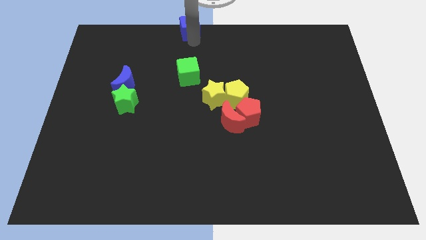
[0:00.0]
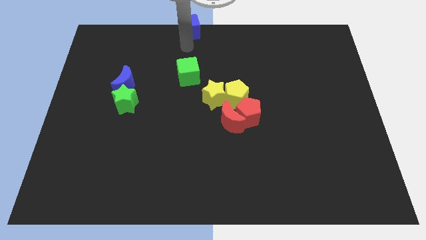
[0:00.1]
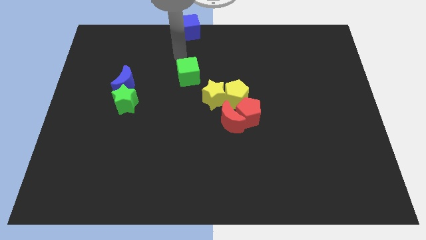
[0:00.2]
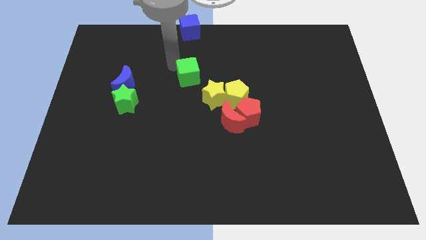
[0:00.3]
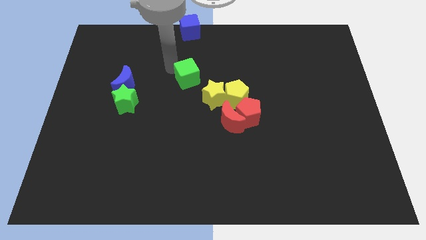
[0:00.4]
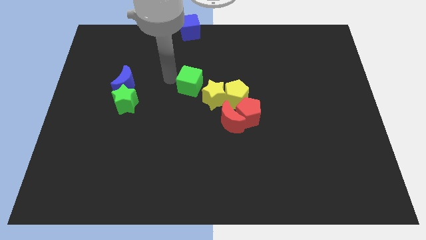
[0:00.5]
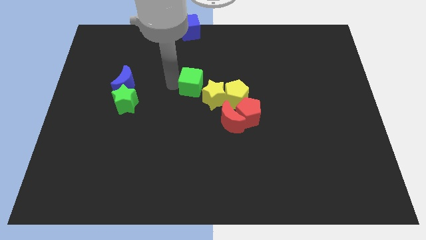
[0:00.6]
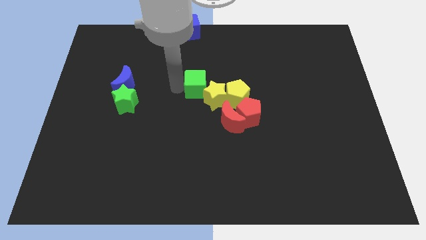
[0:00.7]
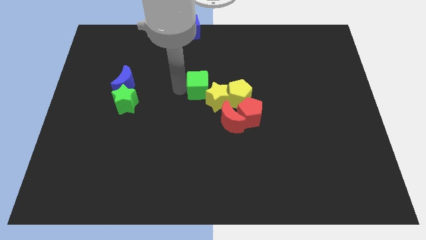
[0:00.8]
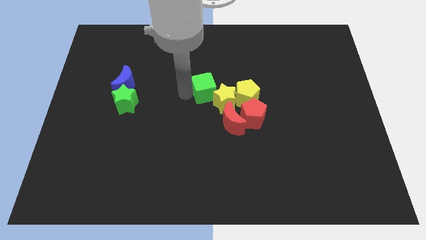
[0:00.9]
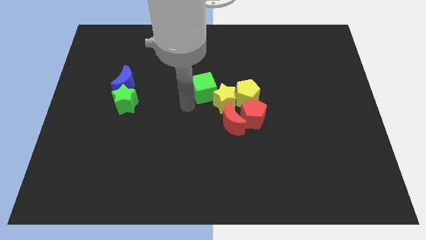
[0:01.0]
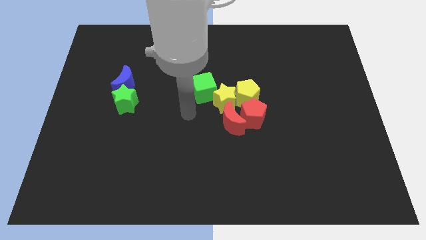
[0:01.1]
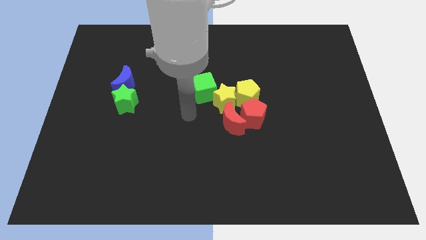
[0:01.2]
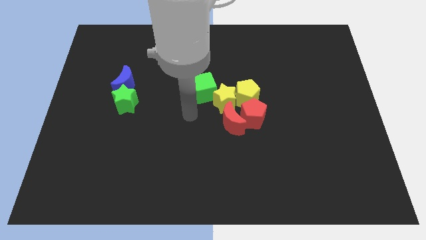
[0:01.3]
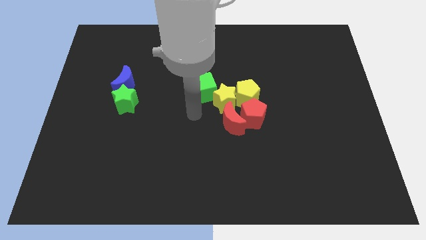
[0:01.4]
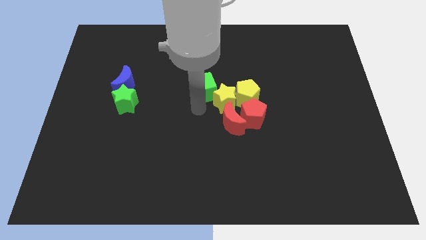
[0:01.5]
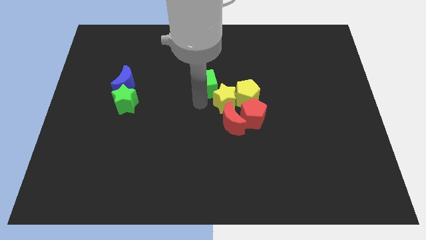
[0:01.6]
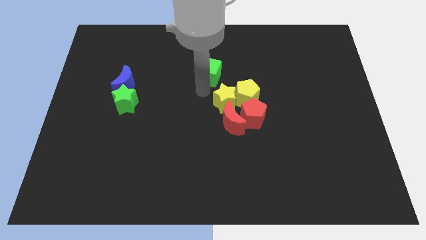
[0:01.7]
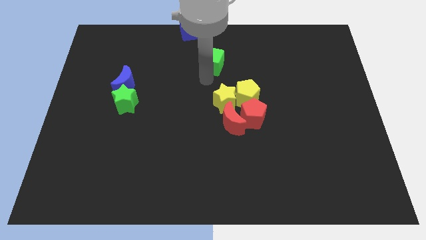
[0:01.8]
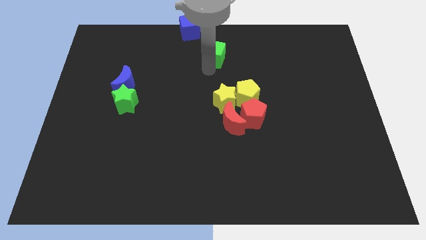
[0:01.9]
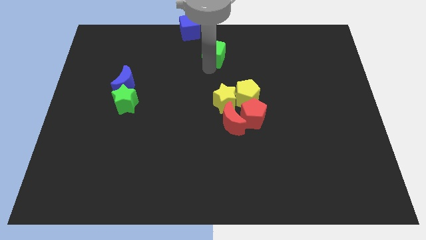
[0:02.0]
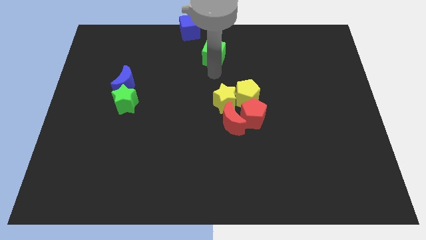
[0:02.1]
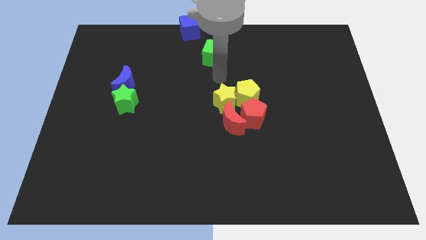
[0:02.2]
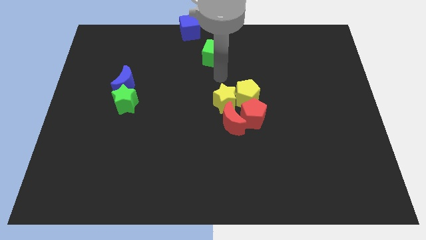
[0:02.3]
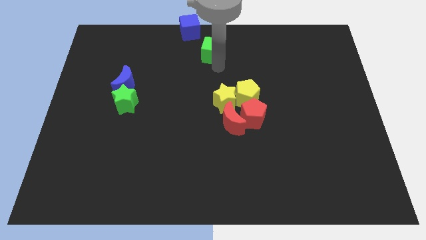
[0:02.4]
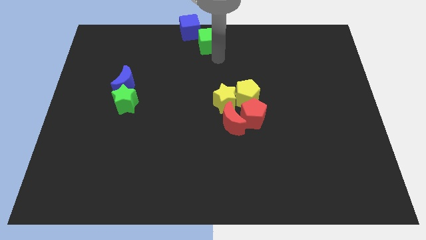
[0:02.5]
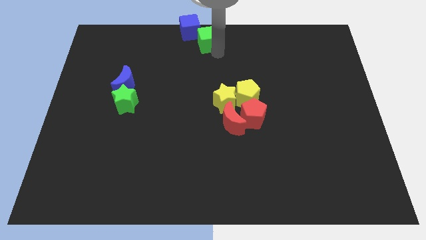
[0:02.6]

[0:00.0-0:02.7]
place the green cube and place it near blue cube at the top center of the board

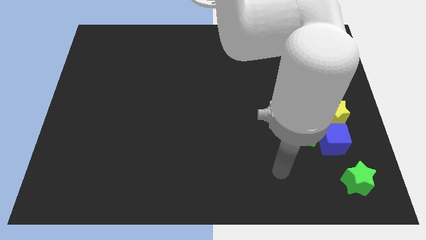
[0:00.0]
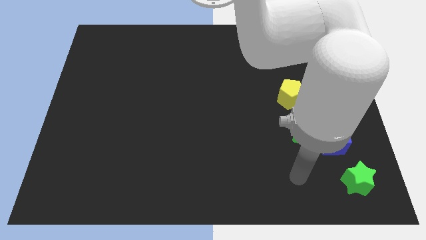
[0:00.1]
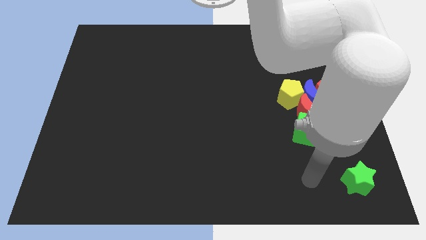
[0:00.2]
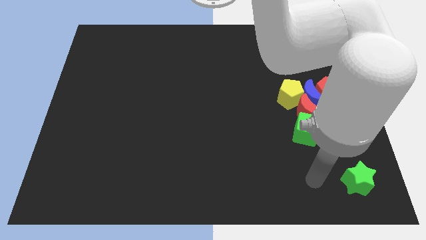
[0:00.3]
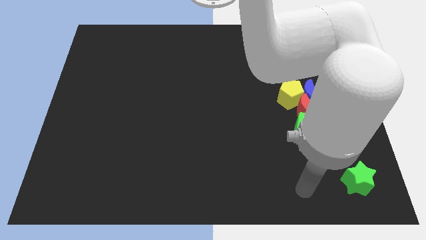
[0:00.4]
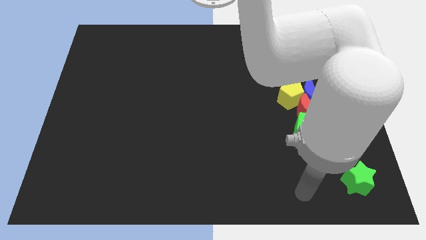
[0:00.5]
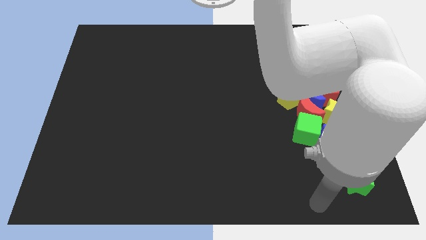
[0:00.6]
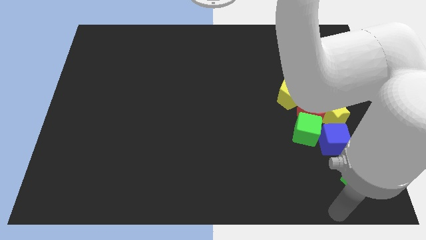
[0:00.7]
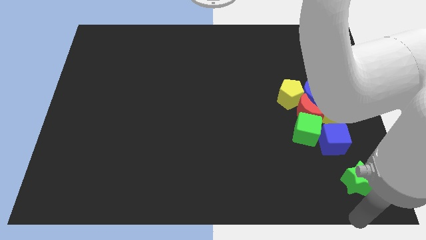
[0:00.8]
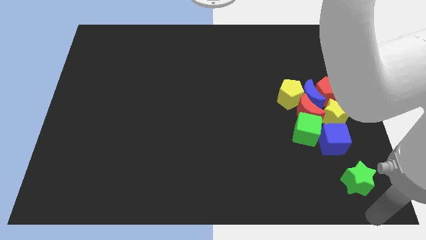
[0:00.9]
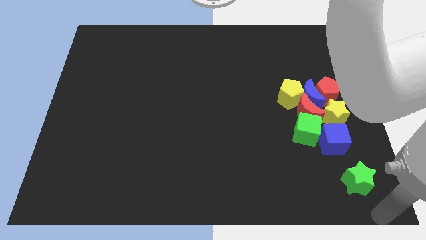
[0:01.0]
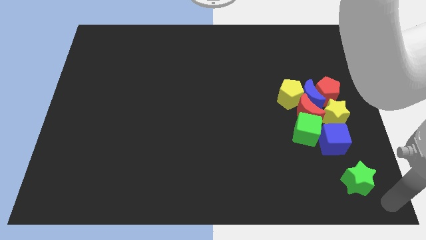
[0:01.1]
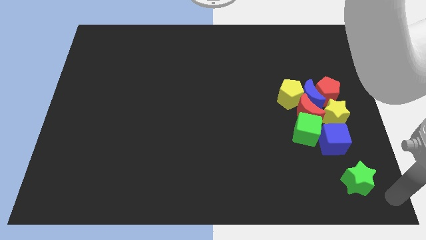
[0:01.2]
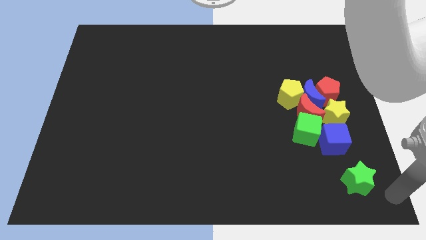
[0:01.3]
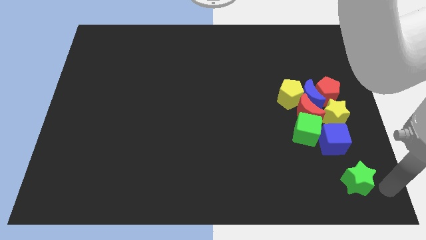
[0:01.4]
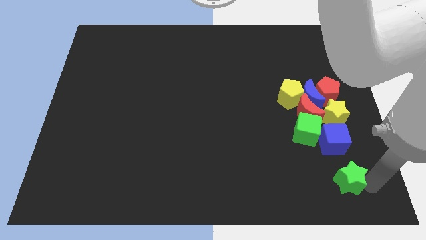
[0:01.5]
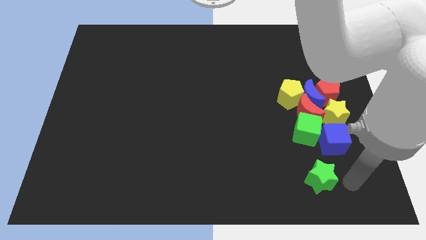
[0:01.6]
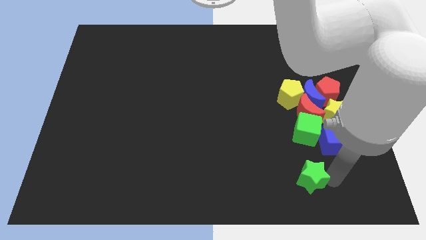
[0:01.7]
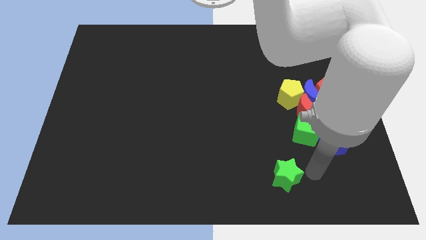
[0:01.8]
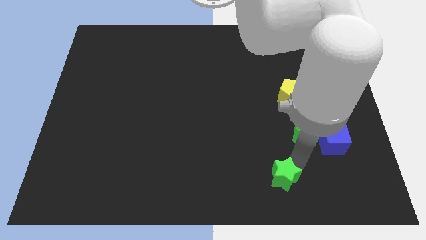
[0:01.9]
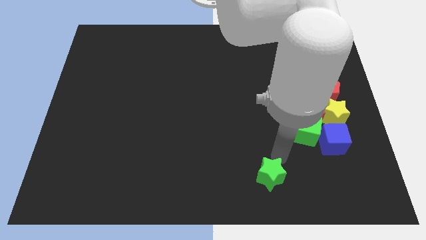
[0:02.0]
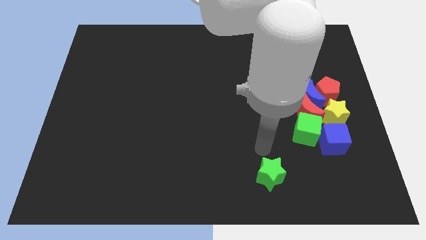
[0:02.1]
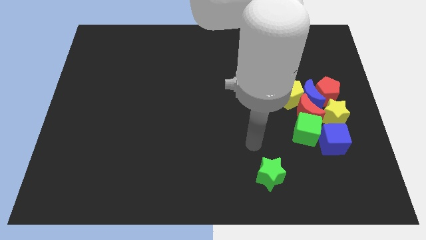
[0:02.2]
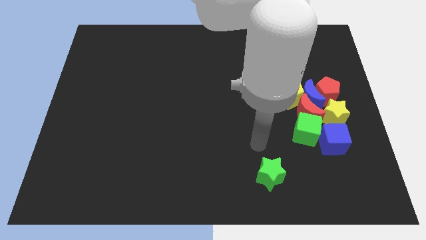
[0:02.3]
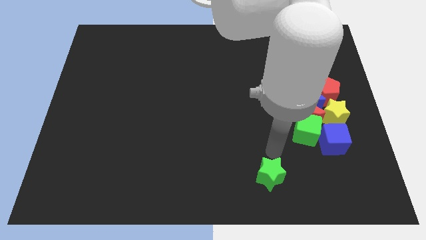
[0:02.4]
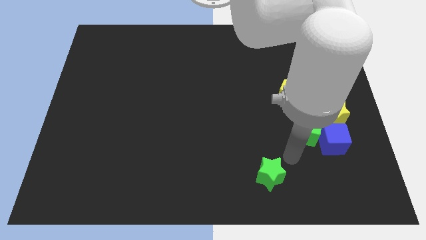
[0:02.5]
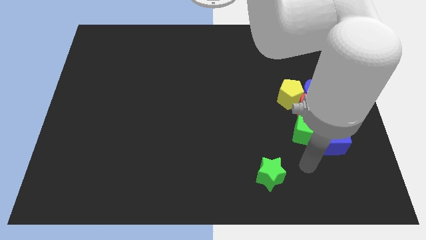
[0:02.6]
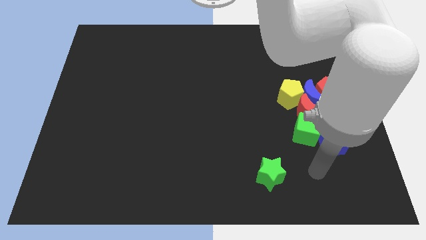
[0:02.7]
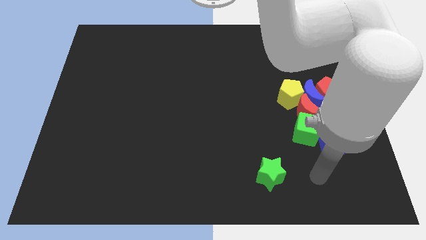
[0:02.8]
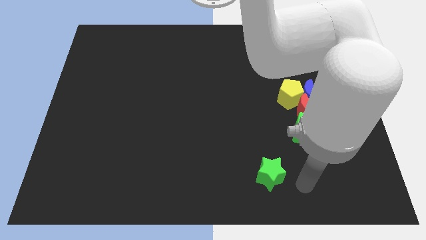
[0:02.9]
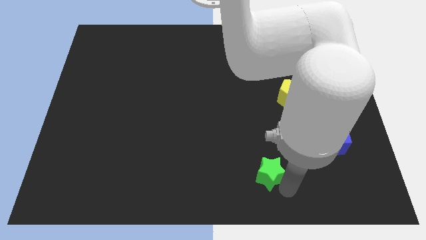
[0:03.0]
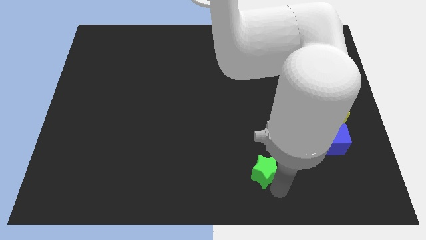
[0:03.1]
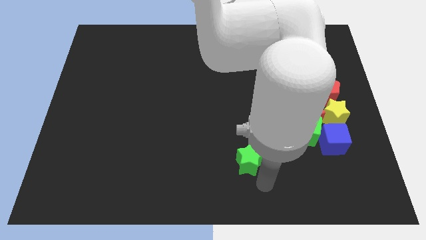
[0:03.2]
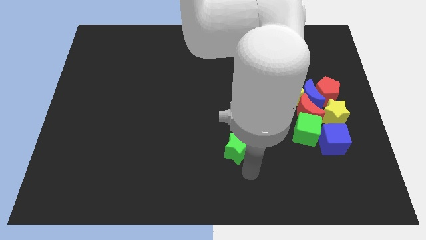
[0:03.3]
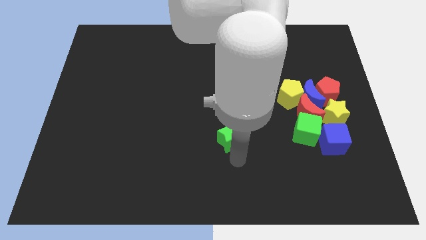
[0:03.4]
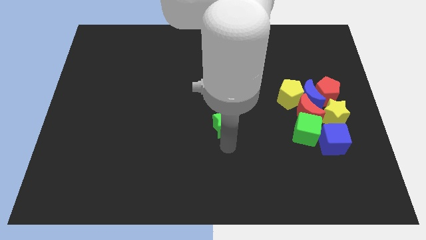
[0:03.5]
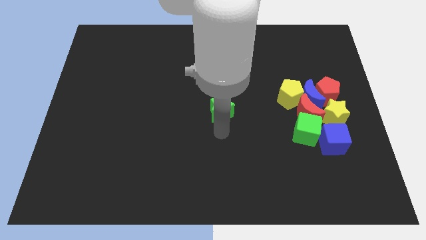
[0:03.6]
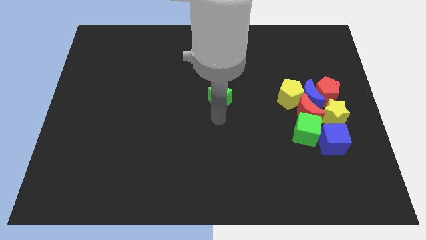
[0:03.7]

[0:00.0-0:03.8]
place the green star at center of the board

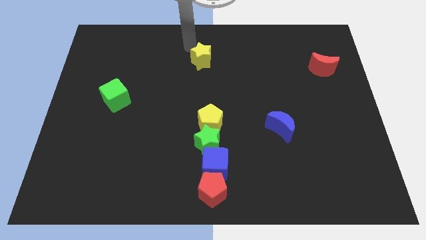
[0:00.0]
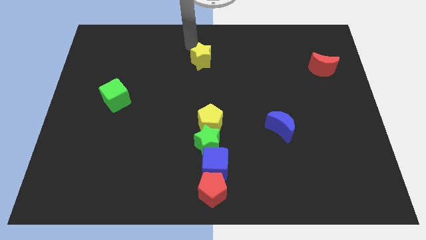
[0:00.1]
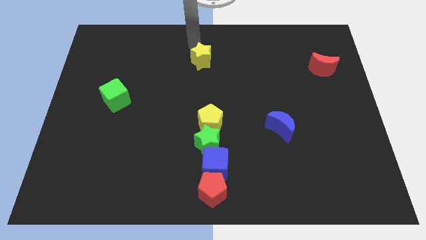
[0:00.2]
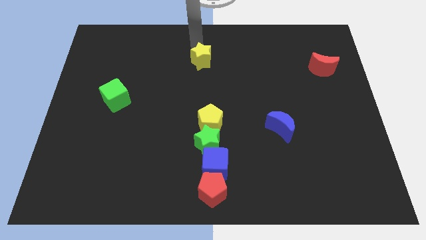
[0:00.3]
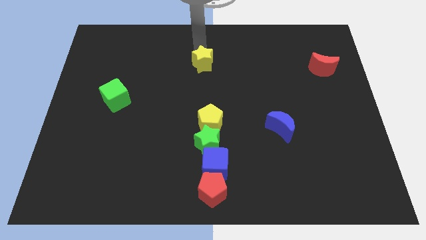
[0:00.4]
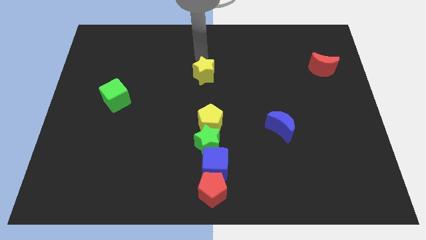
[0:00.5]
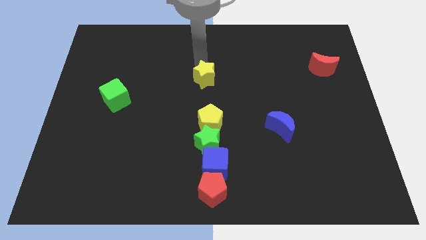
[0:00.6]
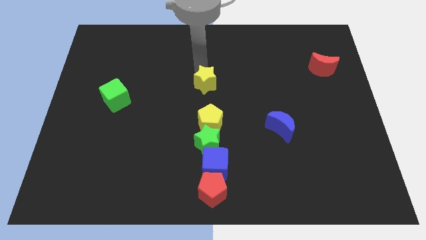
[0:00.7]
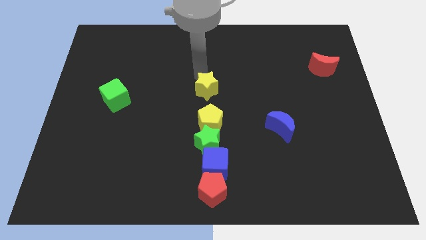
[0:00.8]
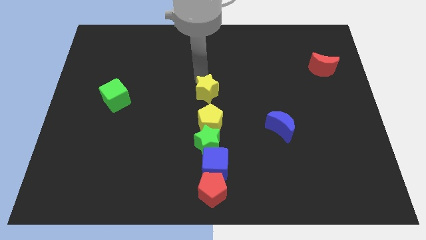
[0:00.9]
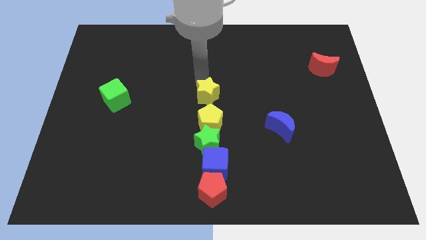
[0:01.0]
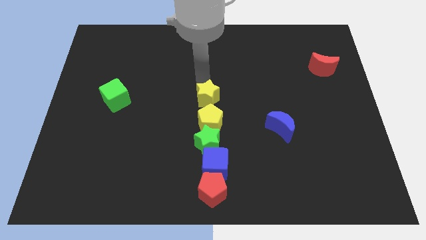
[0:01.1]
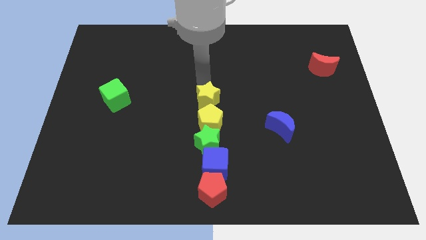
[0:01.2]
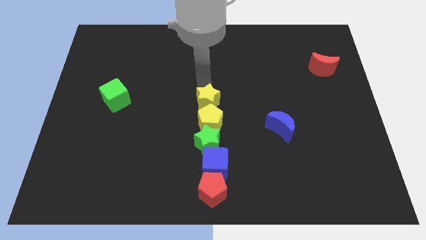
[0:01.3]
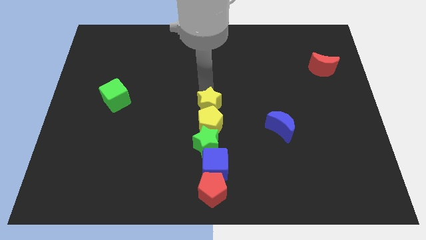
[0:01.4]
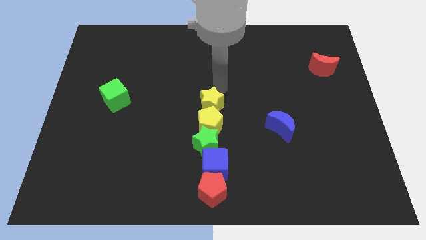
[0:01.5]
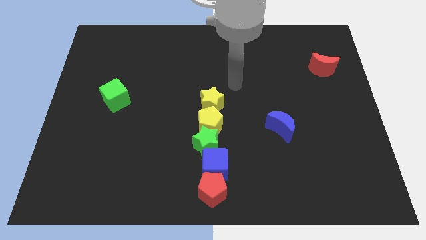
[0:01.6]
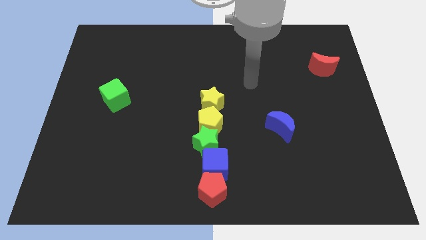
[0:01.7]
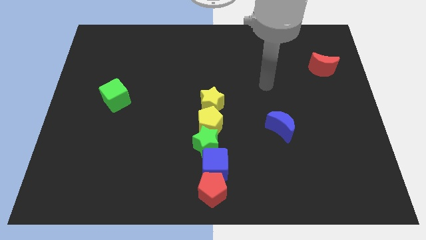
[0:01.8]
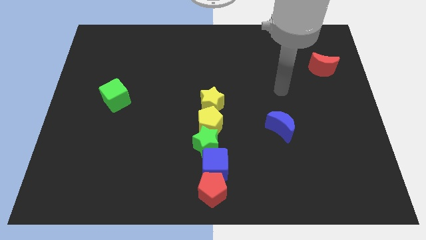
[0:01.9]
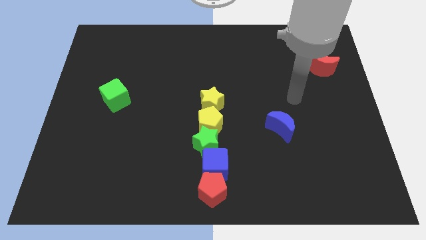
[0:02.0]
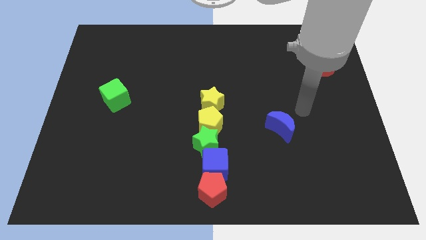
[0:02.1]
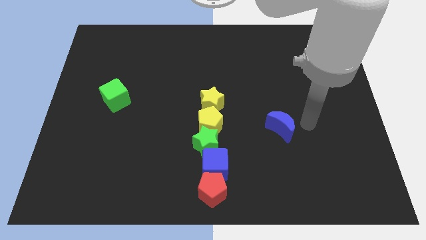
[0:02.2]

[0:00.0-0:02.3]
push the yellow star to the top of yellow pentagon
